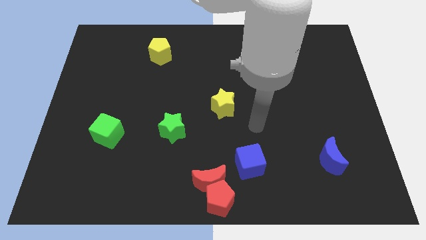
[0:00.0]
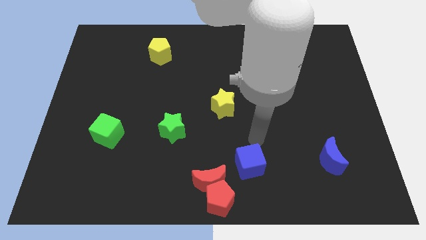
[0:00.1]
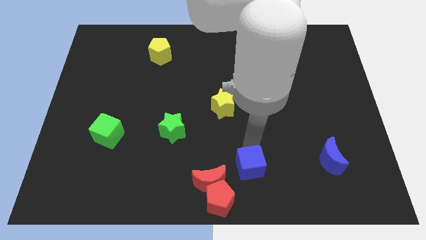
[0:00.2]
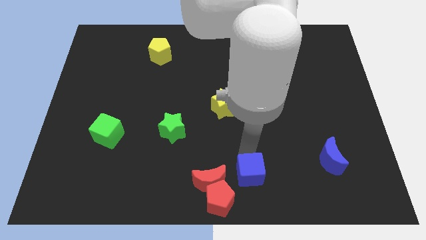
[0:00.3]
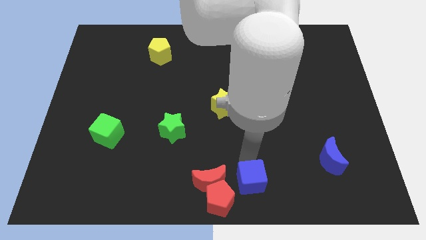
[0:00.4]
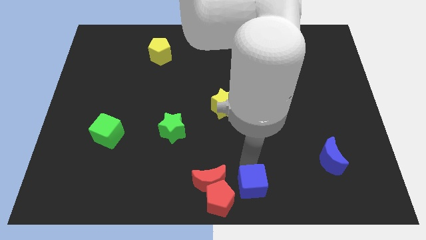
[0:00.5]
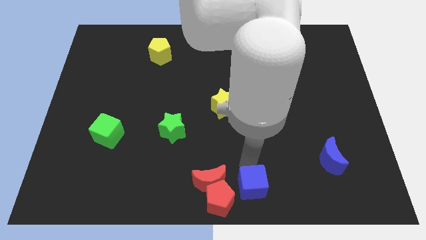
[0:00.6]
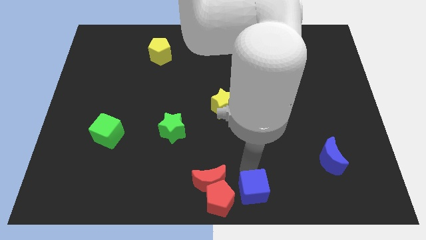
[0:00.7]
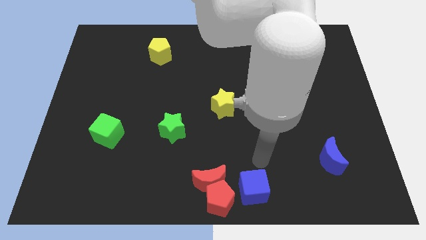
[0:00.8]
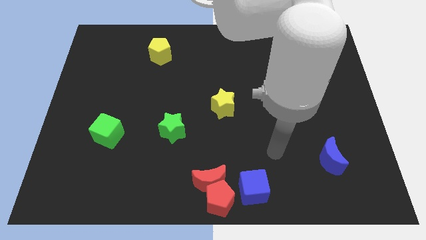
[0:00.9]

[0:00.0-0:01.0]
place the blue cube right to the red pentgaon

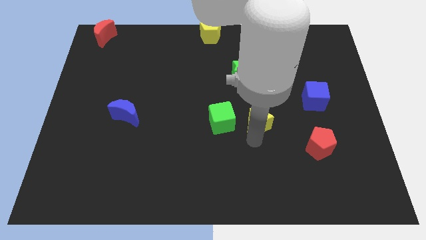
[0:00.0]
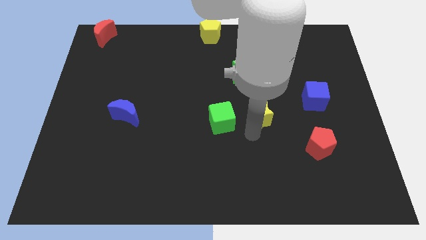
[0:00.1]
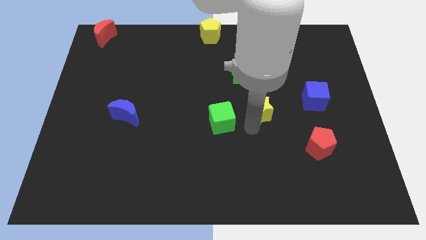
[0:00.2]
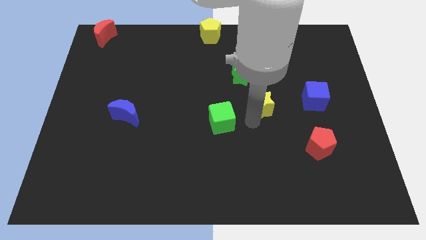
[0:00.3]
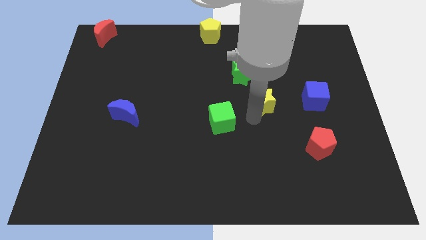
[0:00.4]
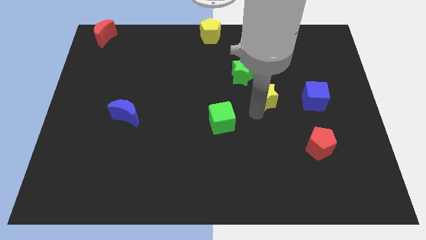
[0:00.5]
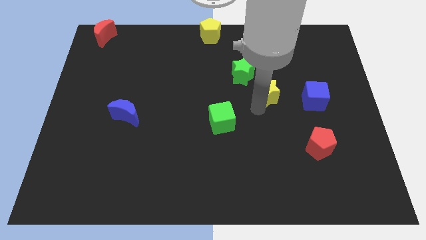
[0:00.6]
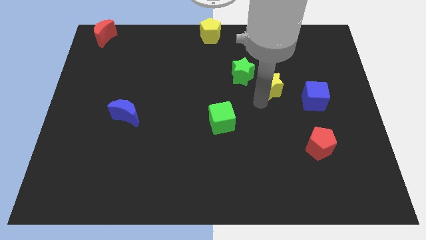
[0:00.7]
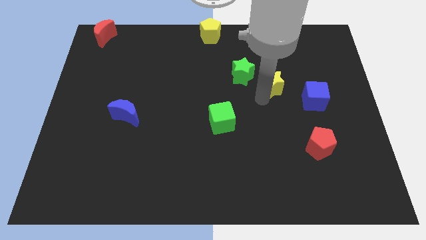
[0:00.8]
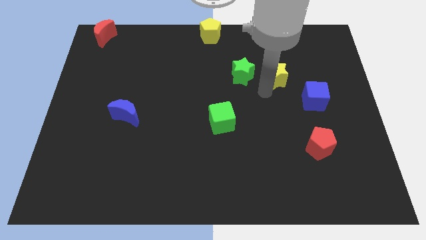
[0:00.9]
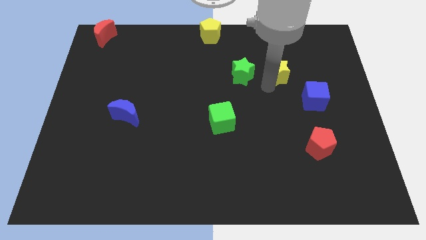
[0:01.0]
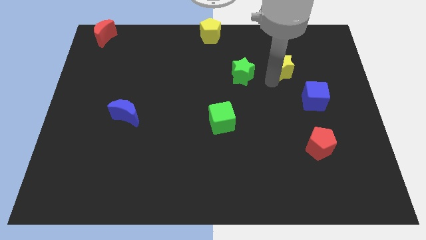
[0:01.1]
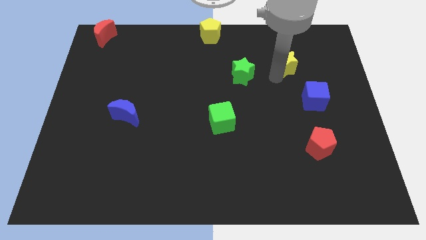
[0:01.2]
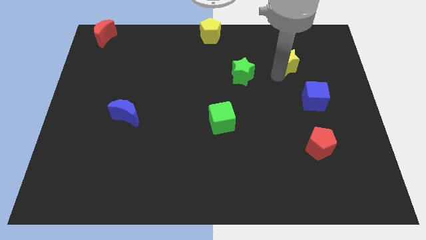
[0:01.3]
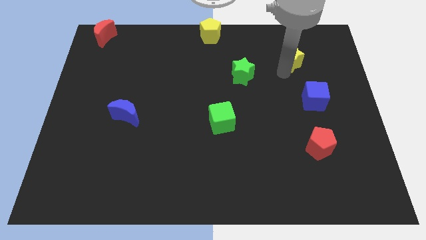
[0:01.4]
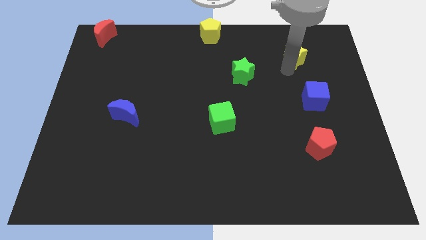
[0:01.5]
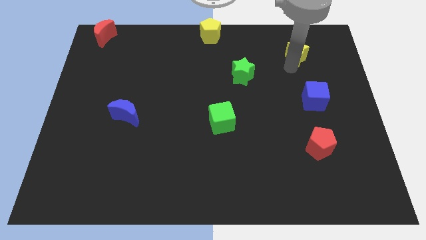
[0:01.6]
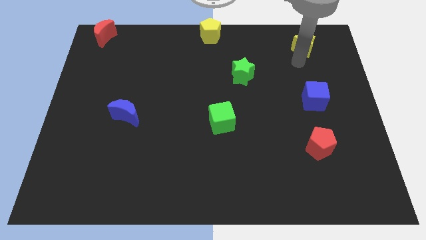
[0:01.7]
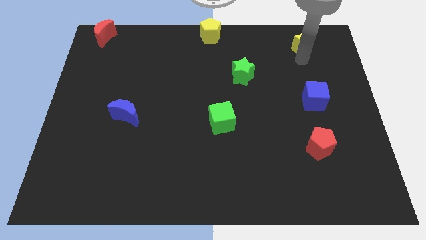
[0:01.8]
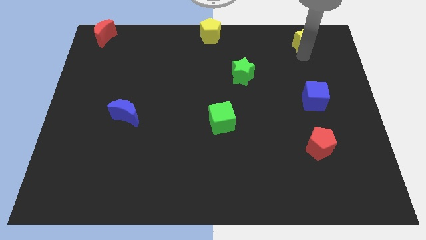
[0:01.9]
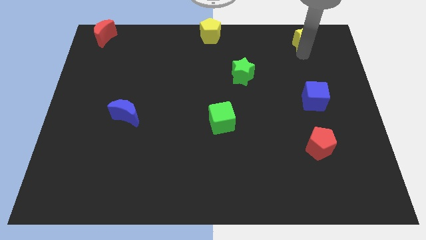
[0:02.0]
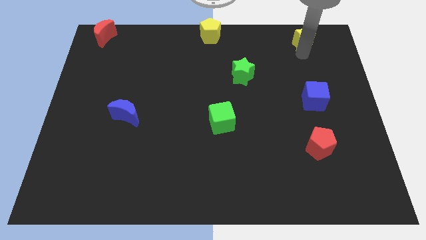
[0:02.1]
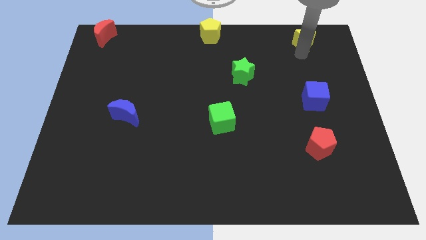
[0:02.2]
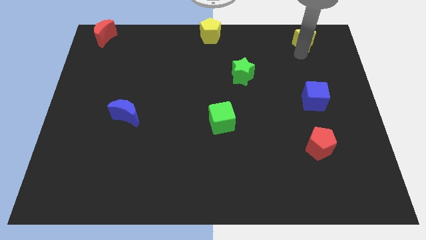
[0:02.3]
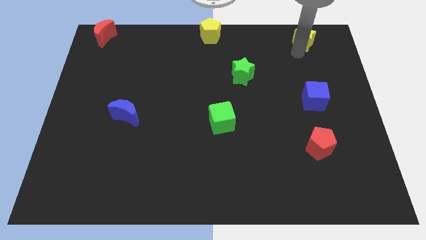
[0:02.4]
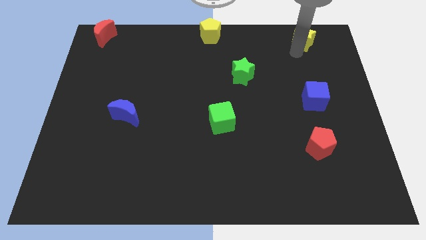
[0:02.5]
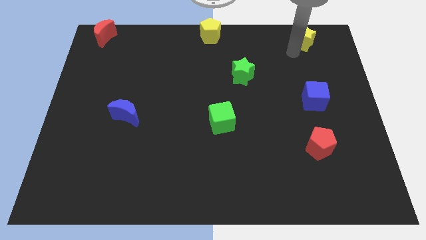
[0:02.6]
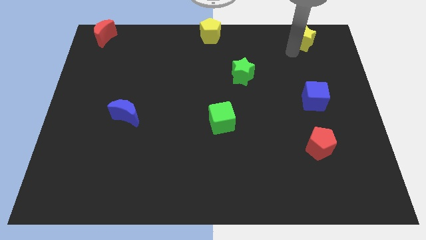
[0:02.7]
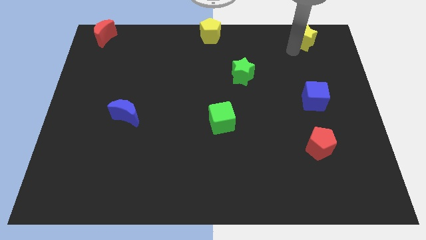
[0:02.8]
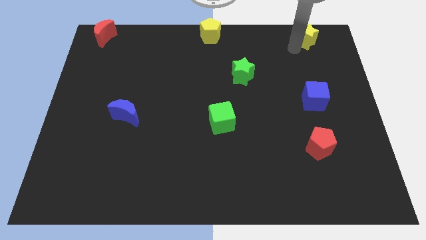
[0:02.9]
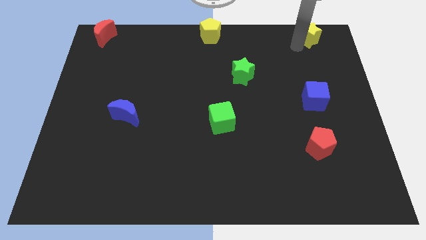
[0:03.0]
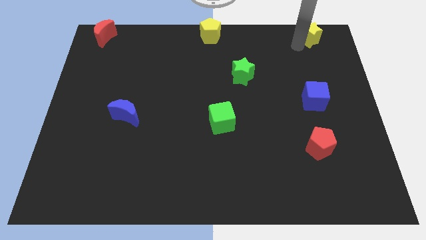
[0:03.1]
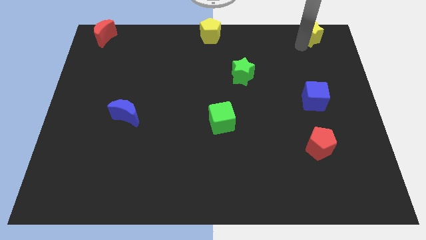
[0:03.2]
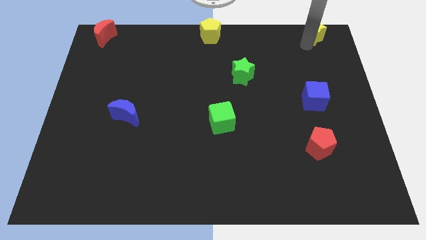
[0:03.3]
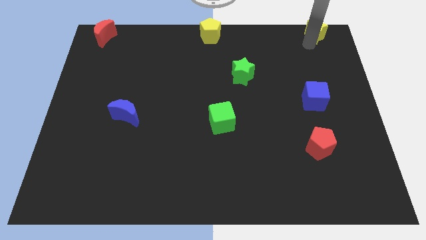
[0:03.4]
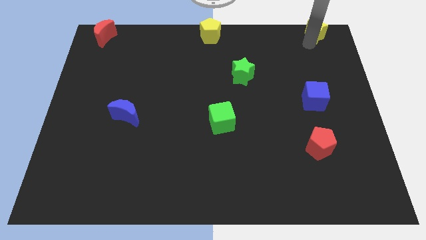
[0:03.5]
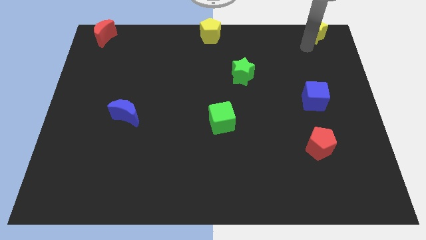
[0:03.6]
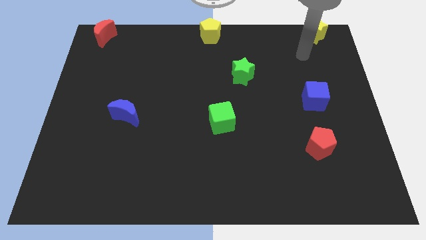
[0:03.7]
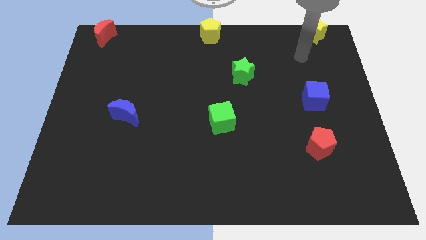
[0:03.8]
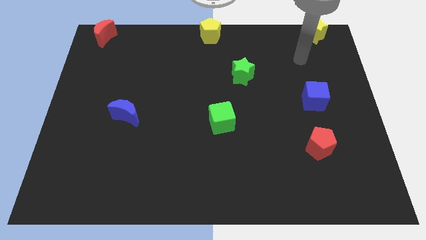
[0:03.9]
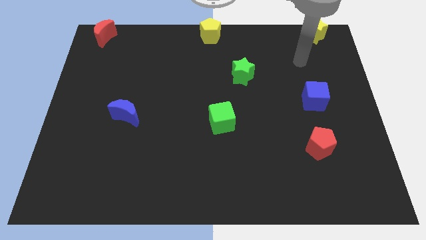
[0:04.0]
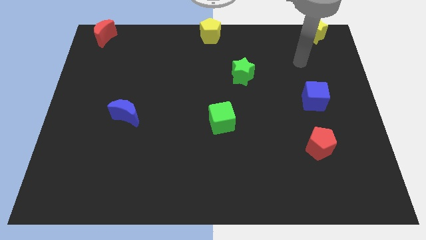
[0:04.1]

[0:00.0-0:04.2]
move the yellow star towards the top right side of the board

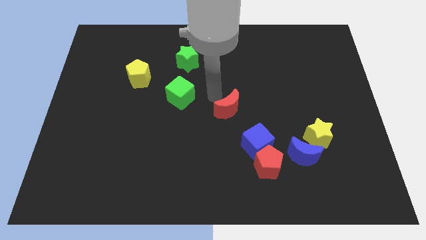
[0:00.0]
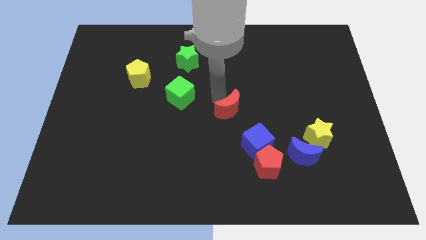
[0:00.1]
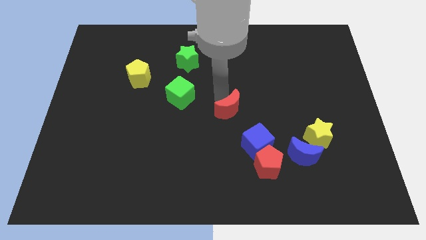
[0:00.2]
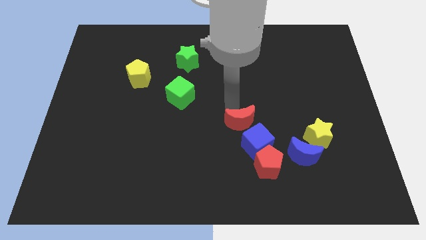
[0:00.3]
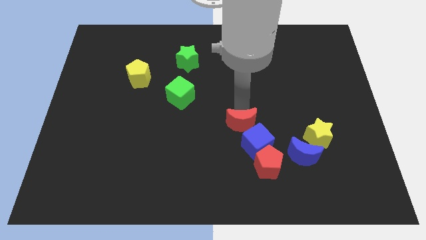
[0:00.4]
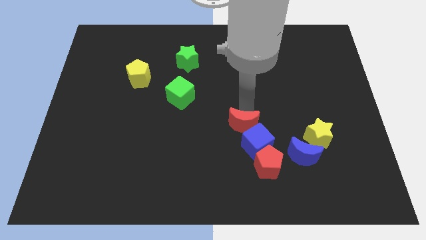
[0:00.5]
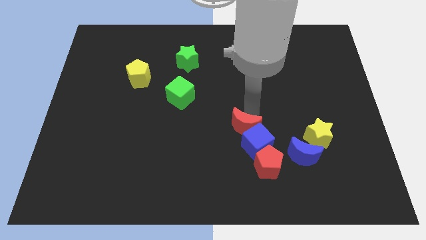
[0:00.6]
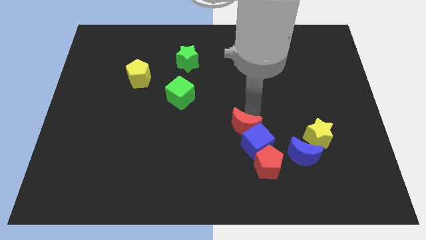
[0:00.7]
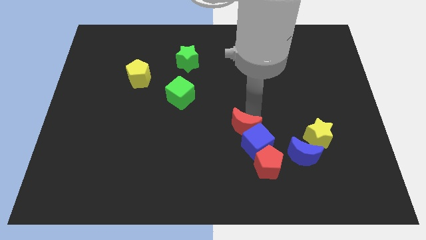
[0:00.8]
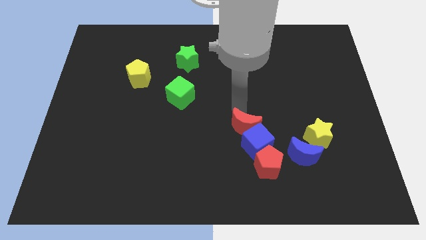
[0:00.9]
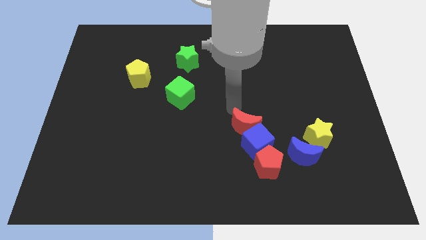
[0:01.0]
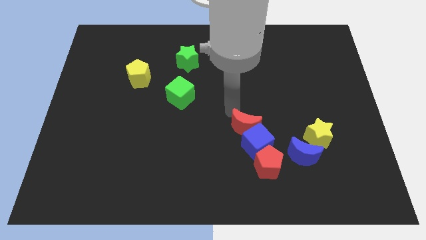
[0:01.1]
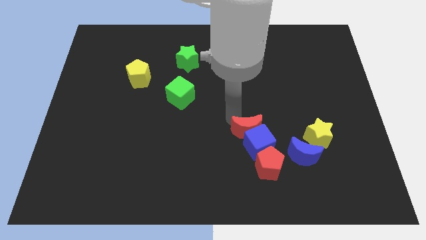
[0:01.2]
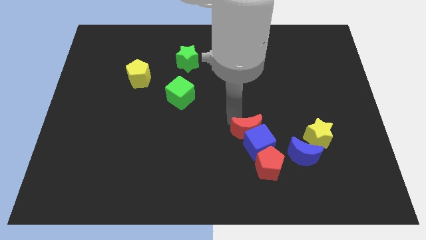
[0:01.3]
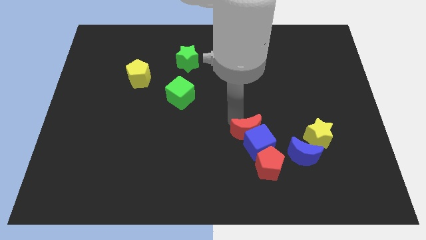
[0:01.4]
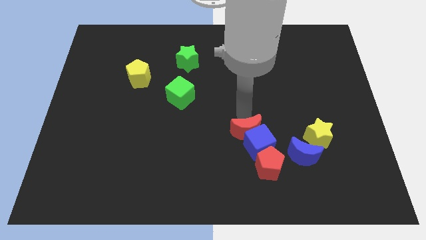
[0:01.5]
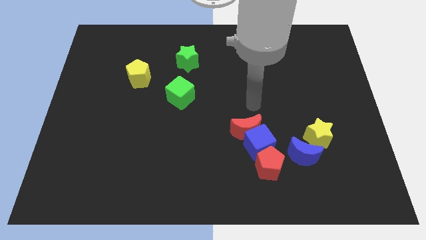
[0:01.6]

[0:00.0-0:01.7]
place the red crescent to the top of the blue cube

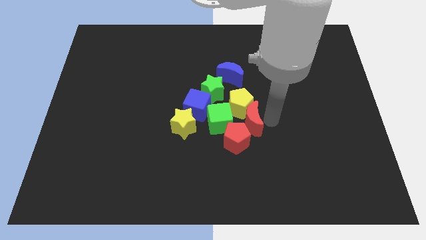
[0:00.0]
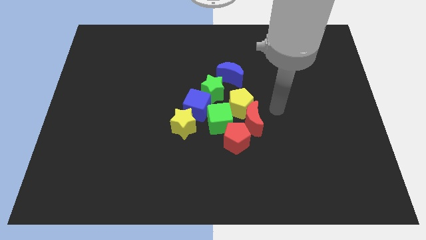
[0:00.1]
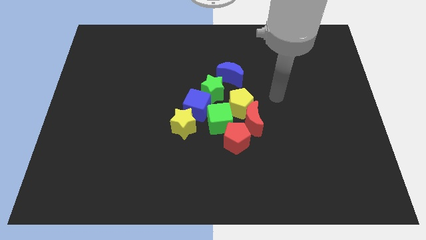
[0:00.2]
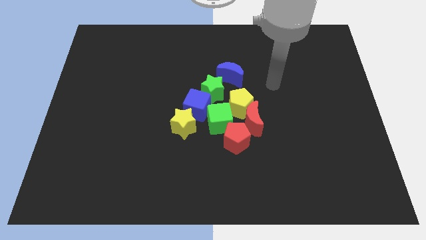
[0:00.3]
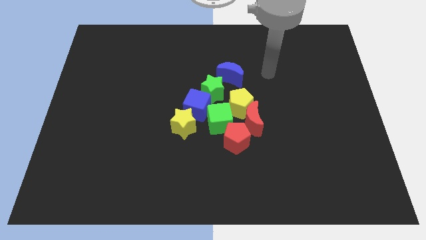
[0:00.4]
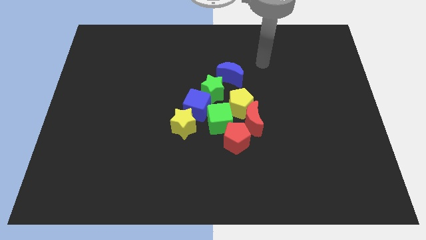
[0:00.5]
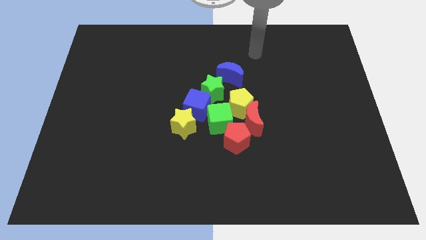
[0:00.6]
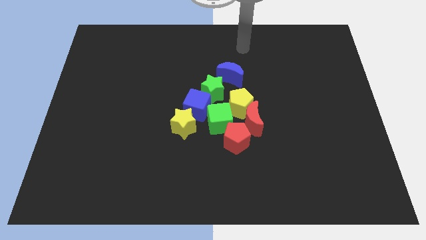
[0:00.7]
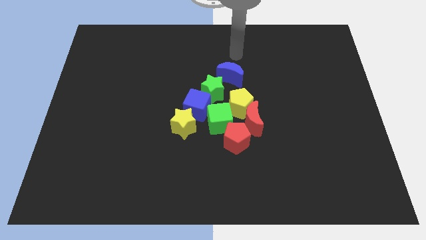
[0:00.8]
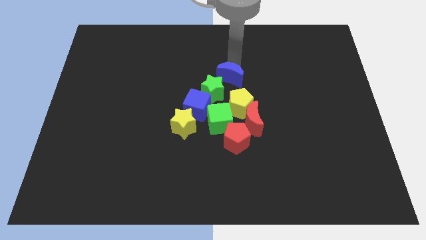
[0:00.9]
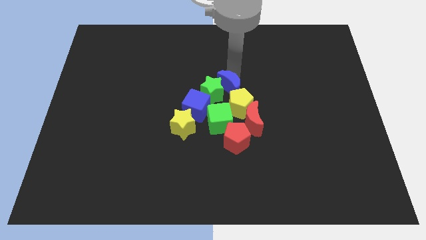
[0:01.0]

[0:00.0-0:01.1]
move away from the red moon

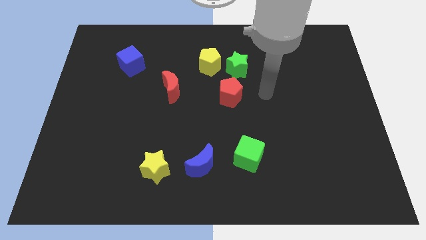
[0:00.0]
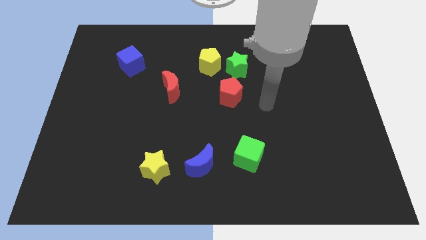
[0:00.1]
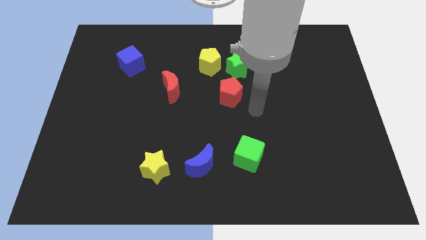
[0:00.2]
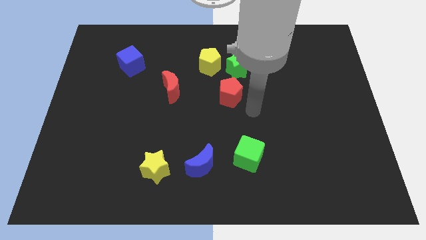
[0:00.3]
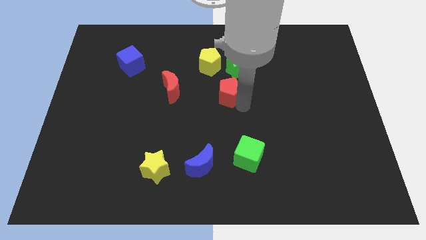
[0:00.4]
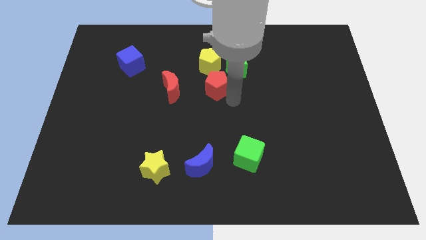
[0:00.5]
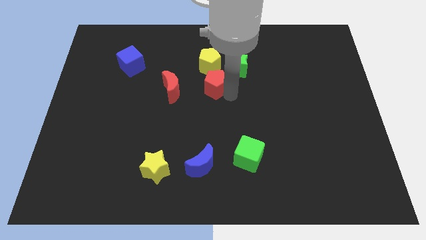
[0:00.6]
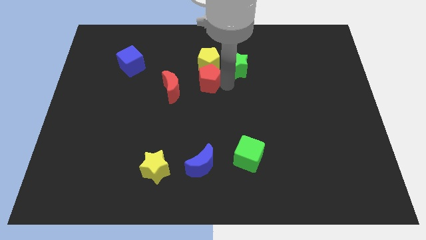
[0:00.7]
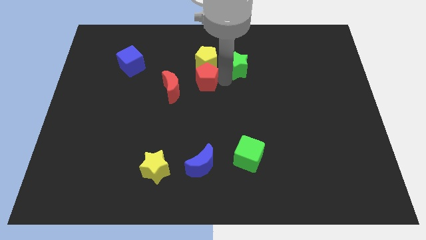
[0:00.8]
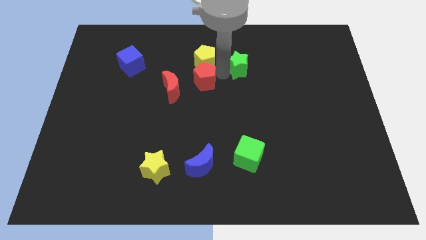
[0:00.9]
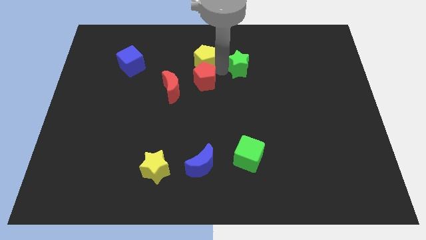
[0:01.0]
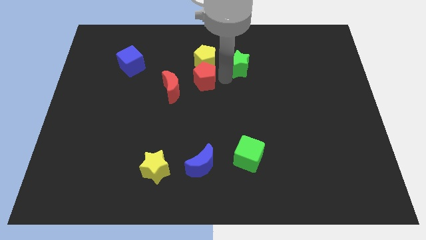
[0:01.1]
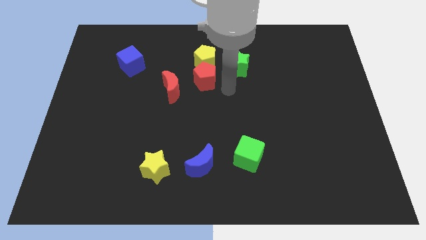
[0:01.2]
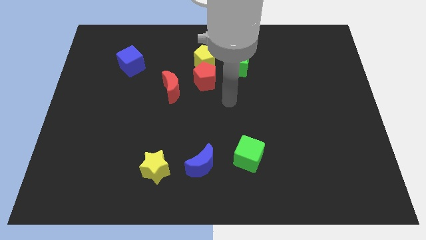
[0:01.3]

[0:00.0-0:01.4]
place the red pentagon below the yellow pentagon
